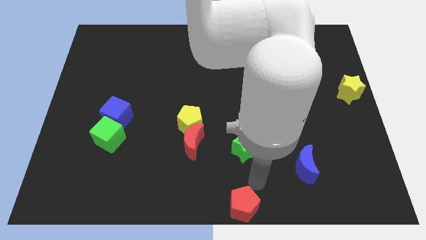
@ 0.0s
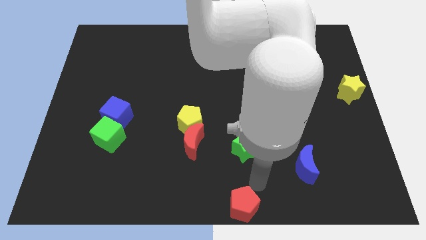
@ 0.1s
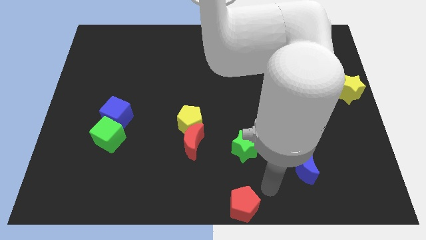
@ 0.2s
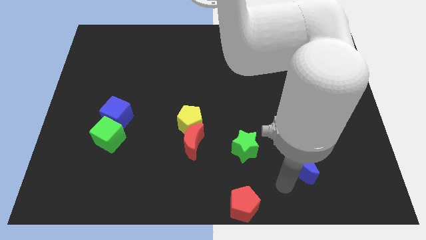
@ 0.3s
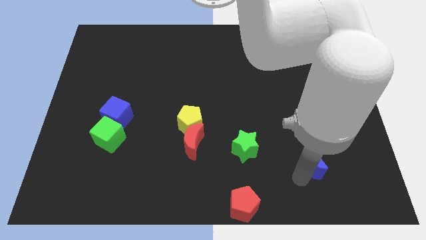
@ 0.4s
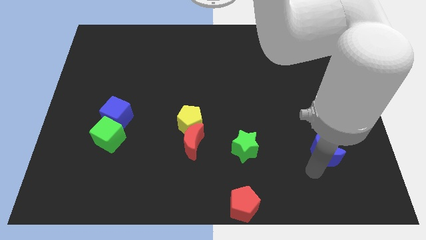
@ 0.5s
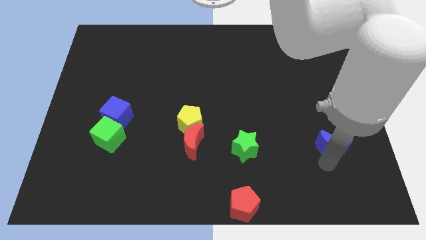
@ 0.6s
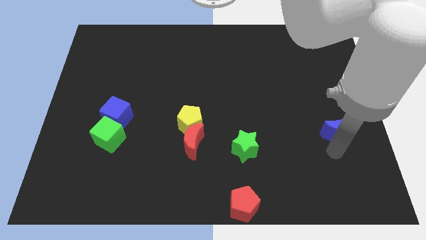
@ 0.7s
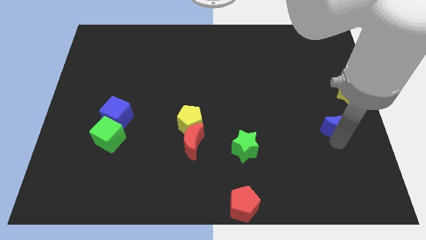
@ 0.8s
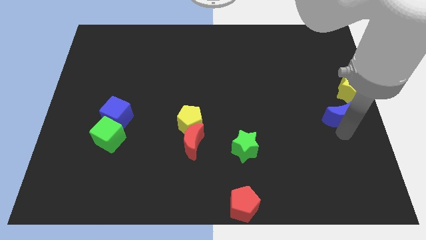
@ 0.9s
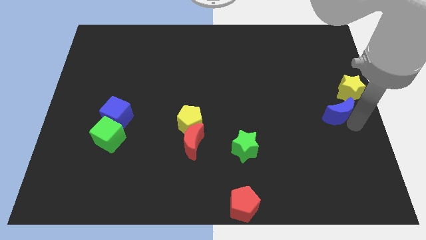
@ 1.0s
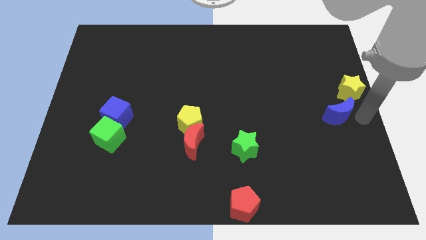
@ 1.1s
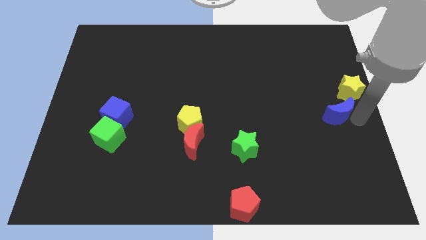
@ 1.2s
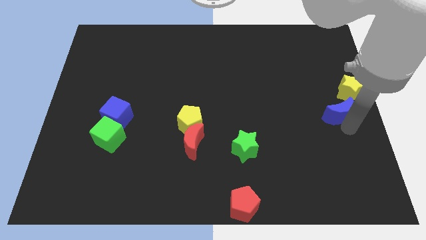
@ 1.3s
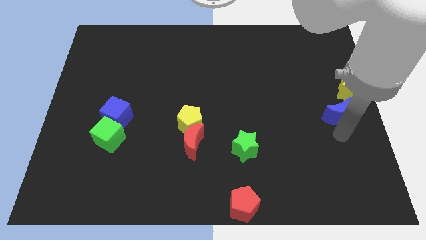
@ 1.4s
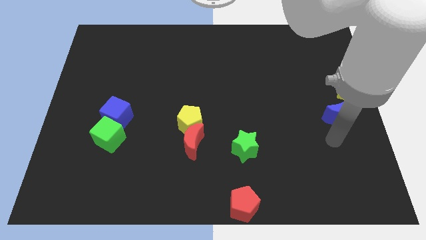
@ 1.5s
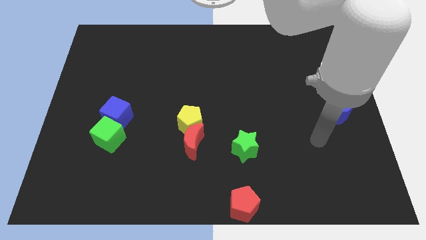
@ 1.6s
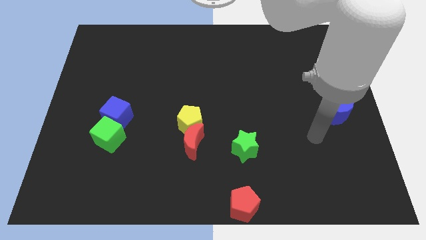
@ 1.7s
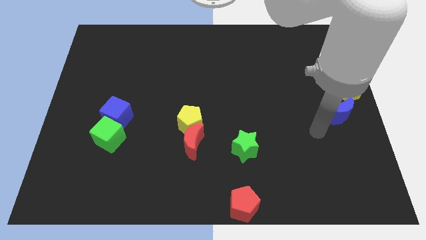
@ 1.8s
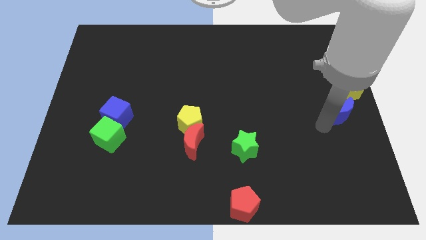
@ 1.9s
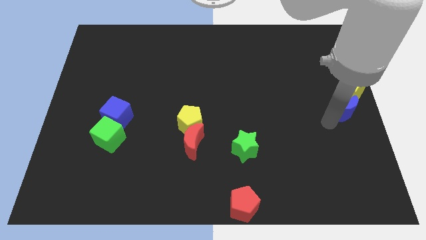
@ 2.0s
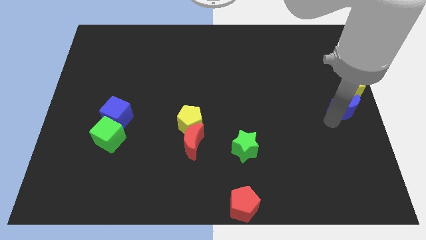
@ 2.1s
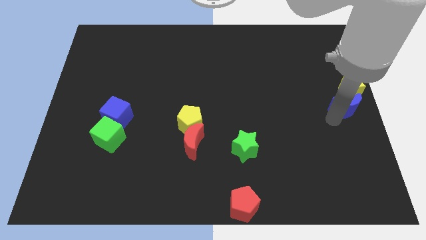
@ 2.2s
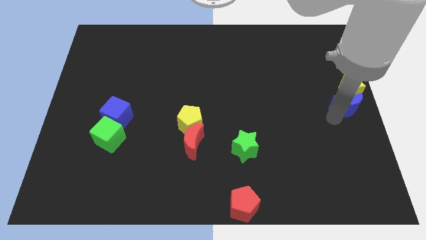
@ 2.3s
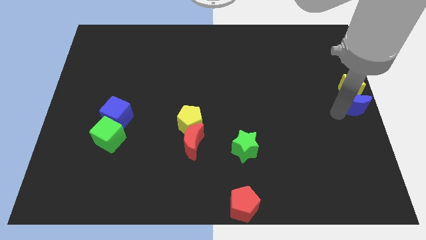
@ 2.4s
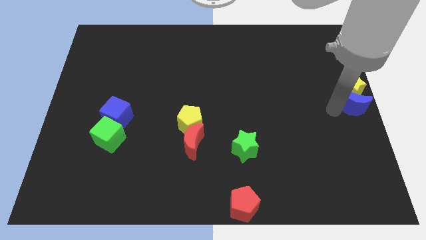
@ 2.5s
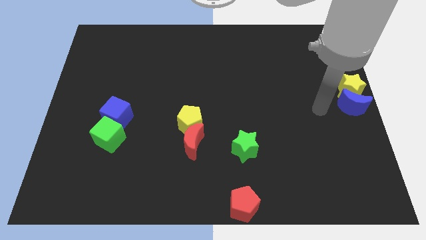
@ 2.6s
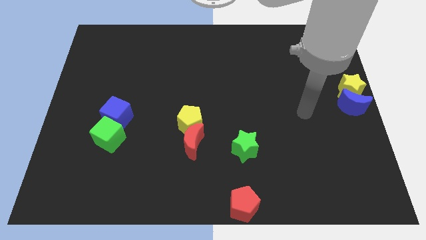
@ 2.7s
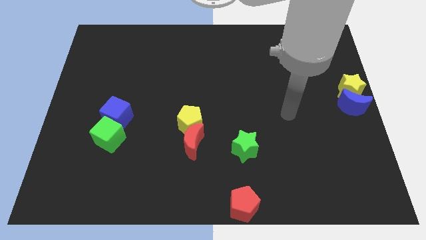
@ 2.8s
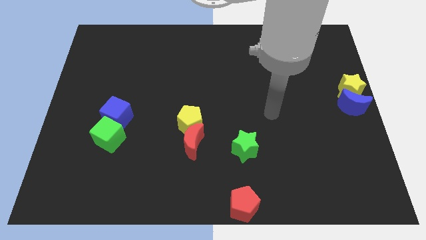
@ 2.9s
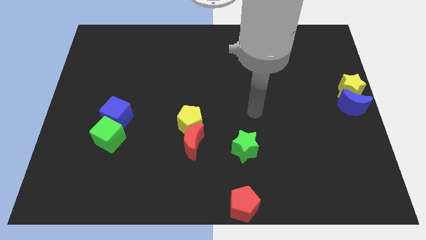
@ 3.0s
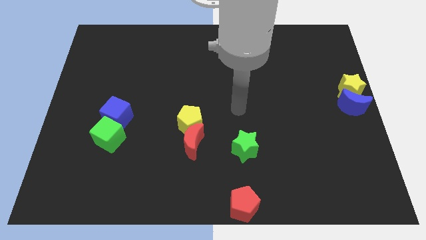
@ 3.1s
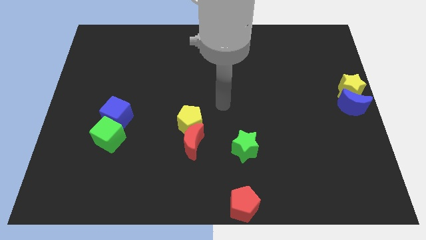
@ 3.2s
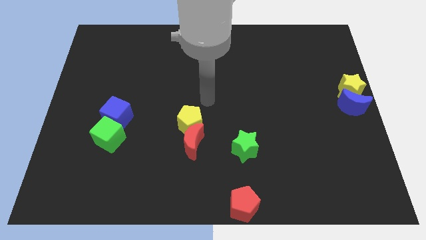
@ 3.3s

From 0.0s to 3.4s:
put the blue moon at the bottom of the yellow star

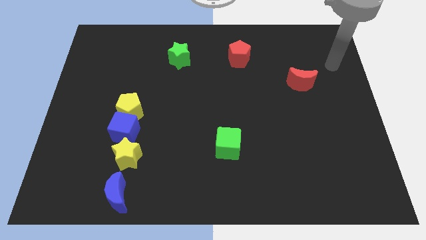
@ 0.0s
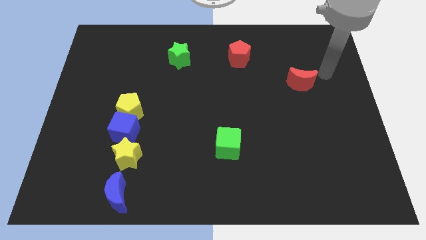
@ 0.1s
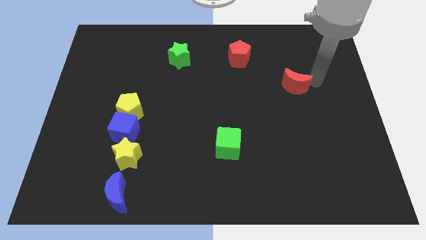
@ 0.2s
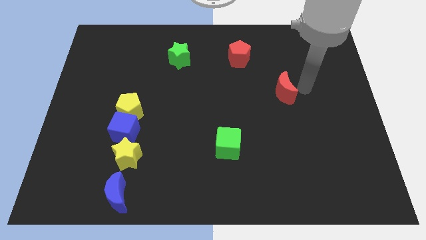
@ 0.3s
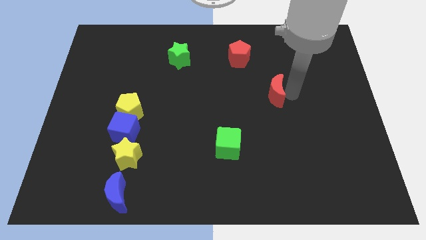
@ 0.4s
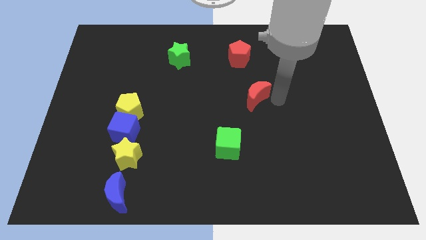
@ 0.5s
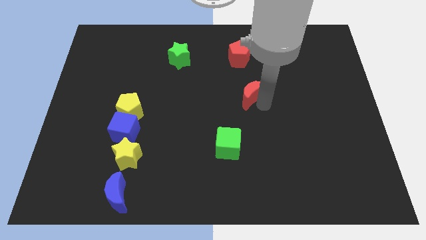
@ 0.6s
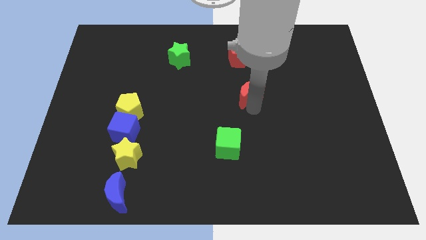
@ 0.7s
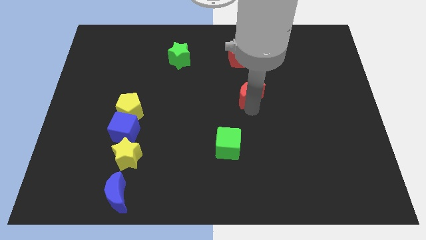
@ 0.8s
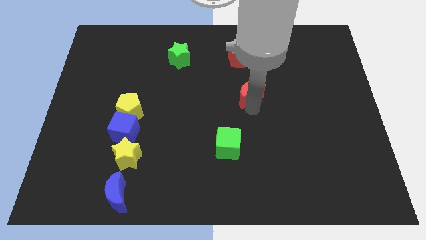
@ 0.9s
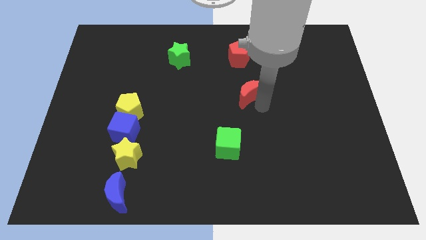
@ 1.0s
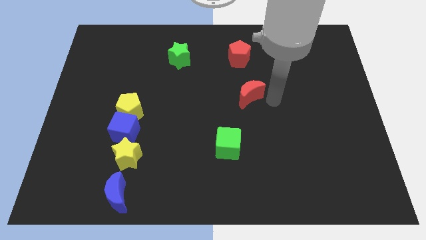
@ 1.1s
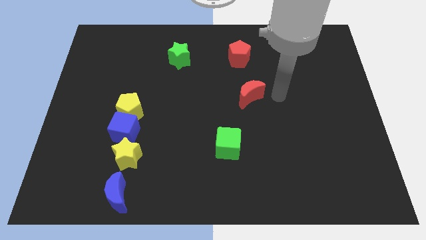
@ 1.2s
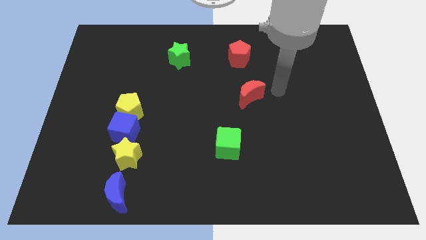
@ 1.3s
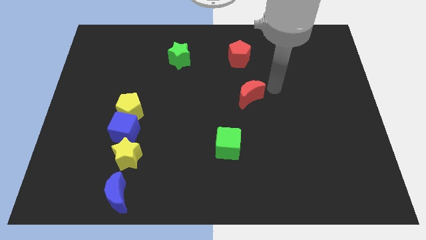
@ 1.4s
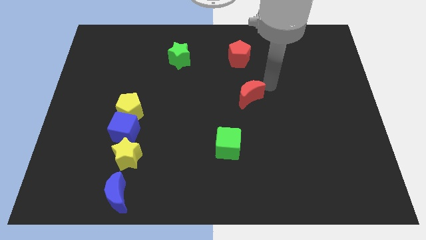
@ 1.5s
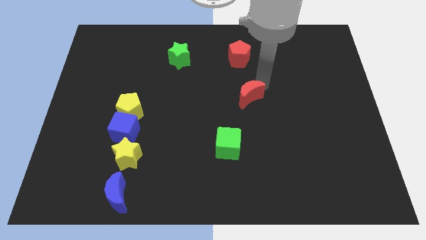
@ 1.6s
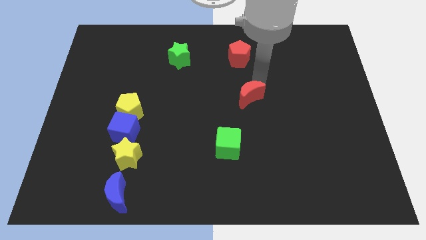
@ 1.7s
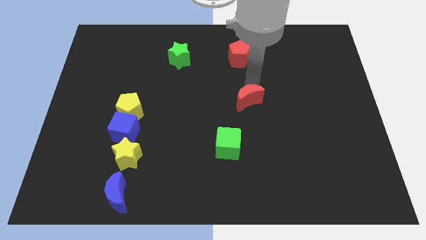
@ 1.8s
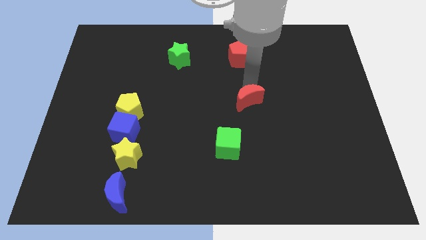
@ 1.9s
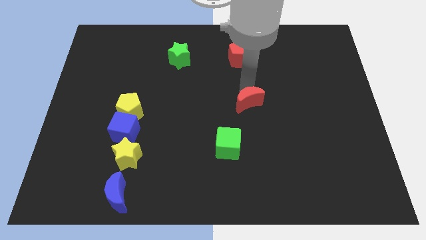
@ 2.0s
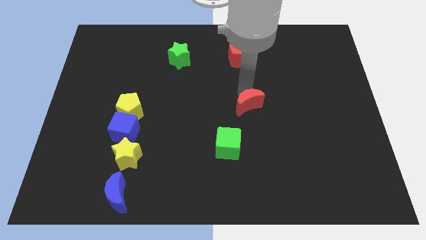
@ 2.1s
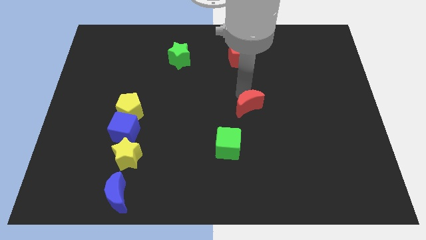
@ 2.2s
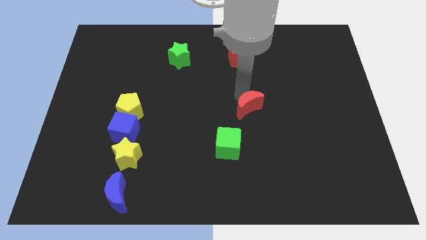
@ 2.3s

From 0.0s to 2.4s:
move the red moon towards the green cube

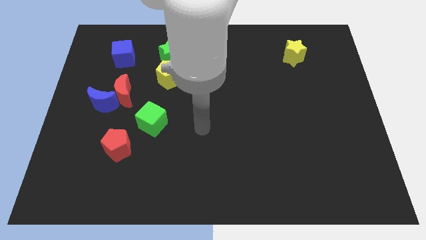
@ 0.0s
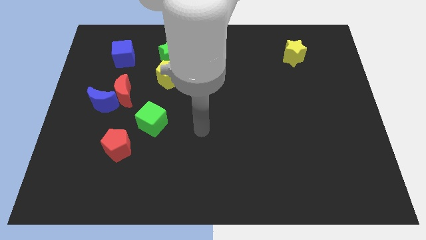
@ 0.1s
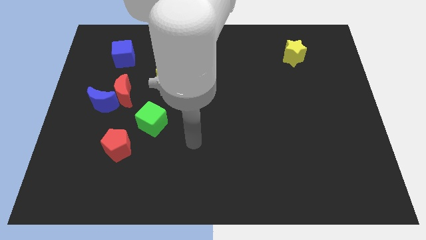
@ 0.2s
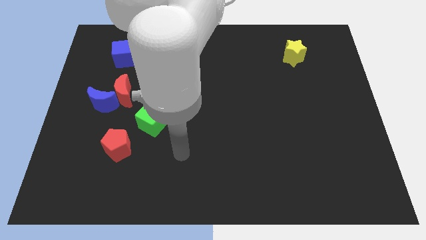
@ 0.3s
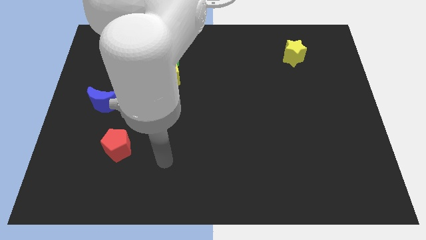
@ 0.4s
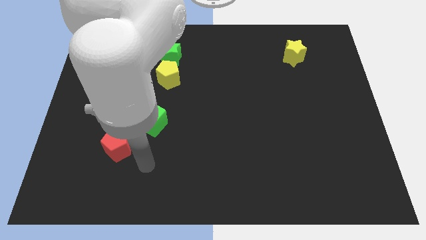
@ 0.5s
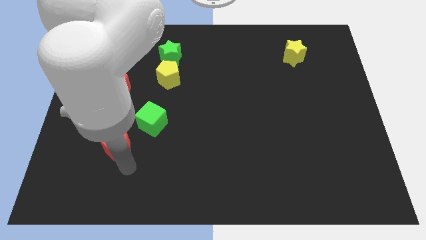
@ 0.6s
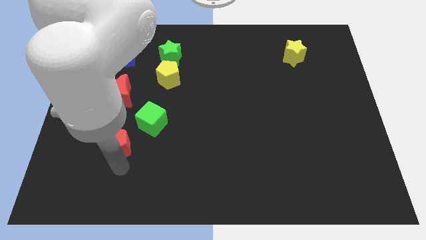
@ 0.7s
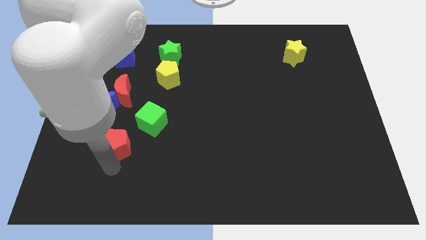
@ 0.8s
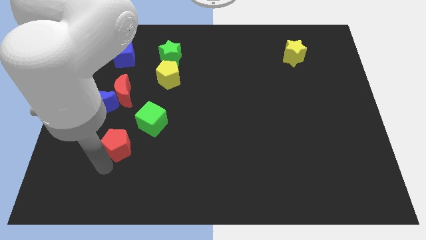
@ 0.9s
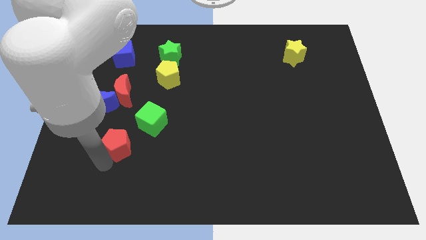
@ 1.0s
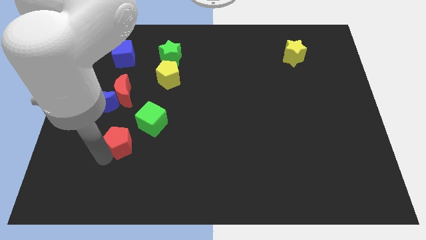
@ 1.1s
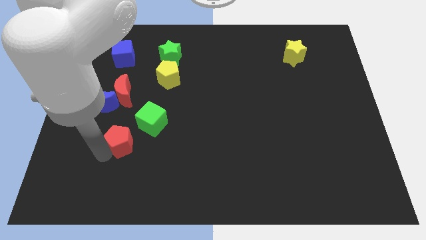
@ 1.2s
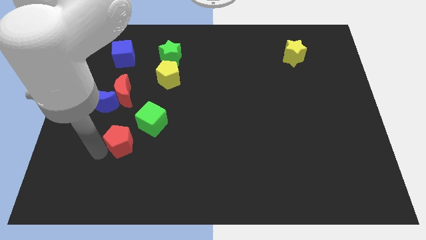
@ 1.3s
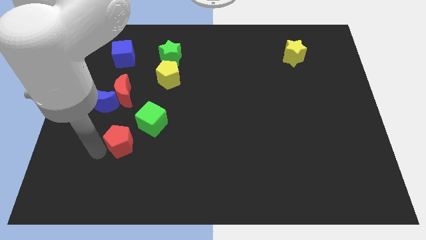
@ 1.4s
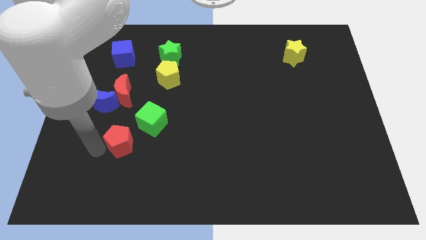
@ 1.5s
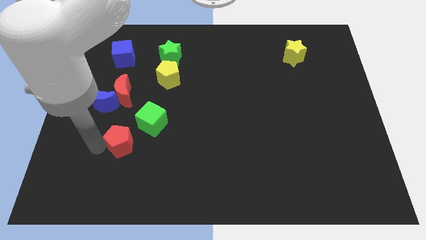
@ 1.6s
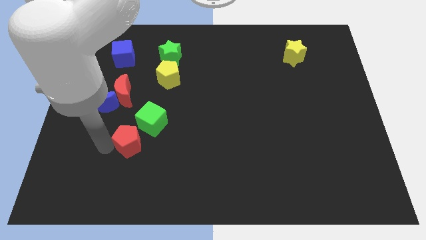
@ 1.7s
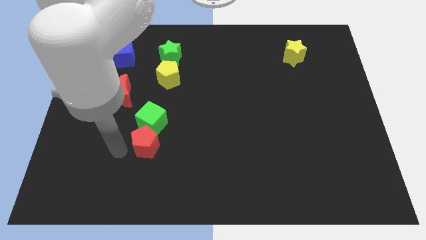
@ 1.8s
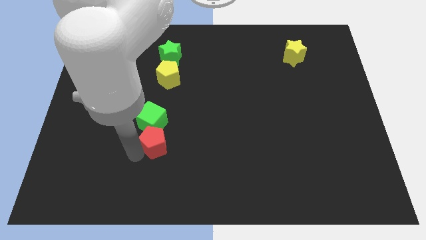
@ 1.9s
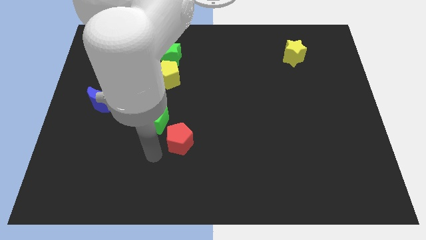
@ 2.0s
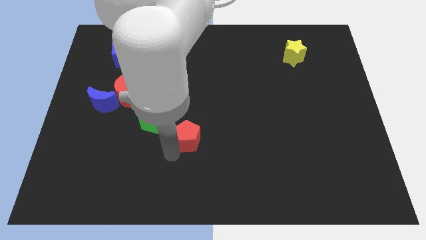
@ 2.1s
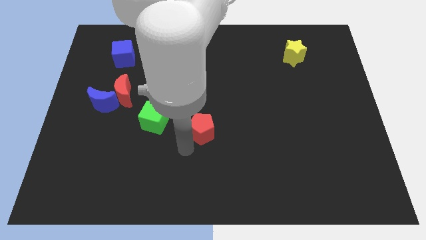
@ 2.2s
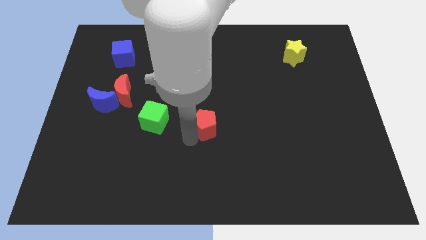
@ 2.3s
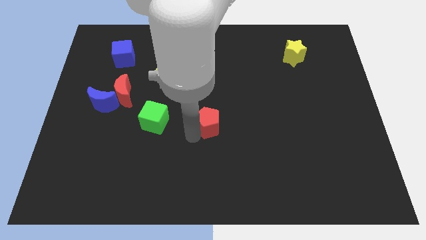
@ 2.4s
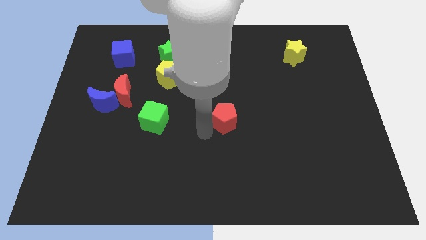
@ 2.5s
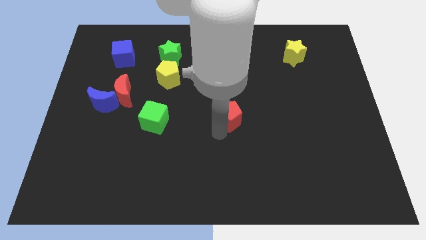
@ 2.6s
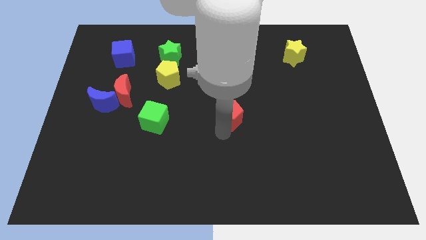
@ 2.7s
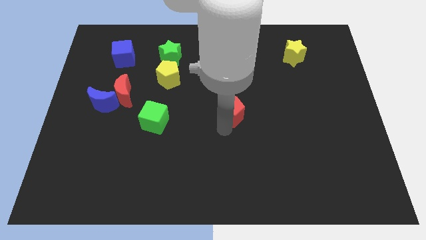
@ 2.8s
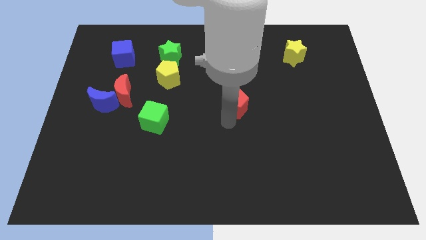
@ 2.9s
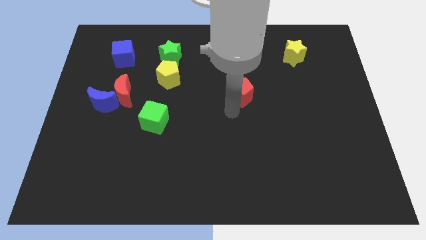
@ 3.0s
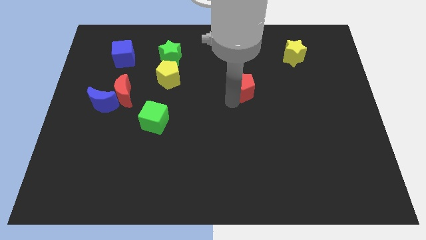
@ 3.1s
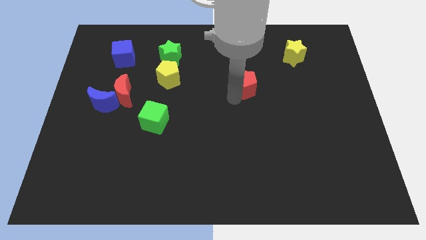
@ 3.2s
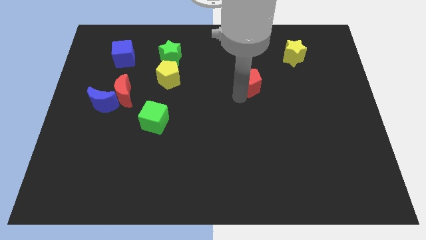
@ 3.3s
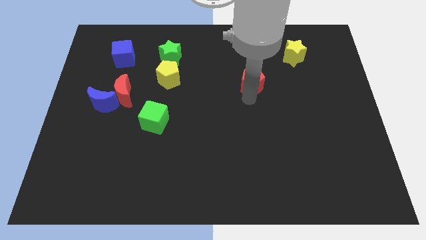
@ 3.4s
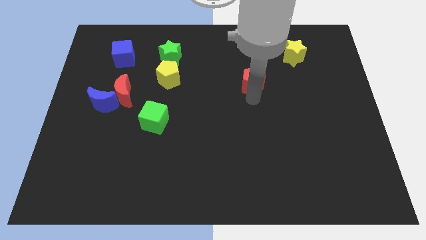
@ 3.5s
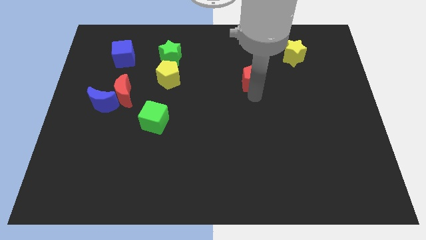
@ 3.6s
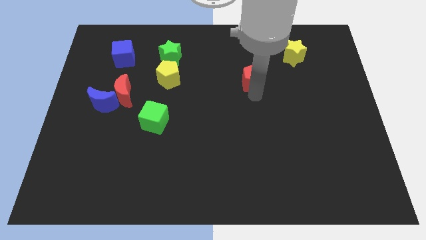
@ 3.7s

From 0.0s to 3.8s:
move the red pentagon towards the yellow star
